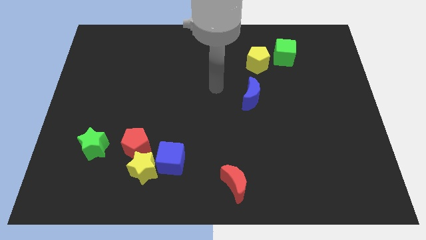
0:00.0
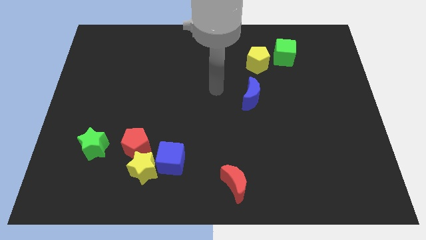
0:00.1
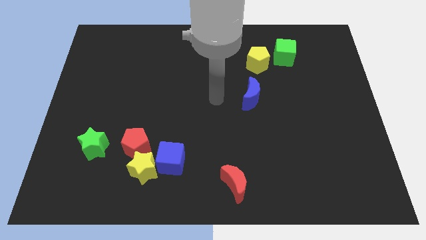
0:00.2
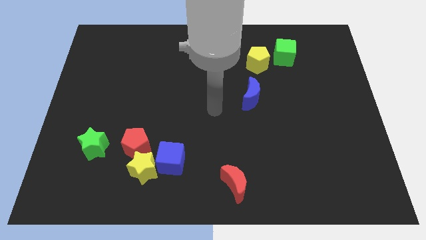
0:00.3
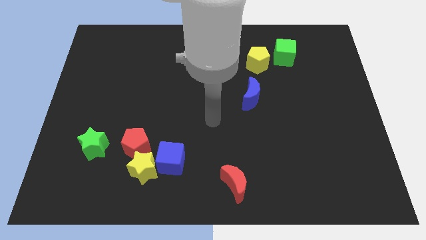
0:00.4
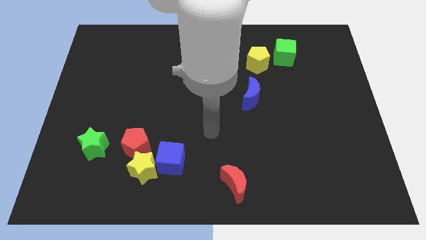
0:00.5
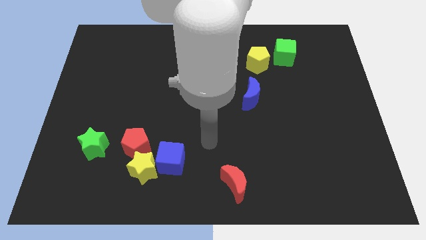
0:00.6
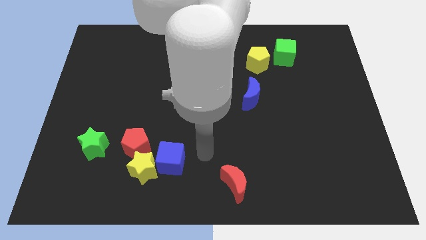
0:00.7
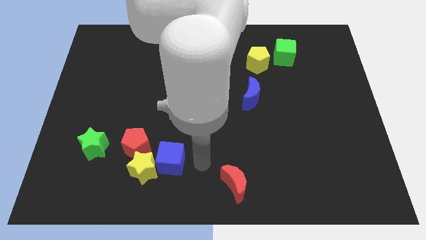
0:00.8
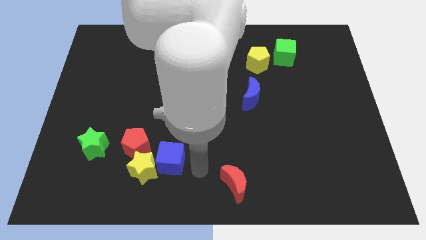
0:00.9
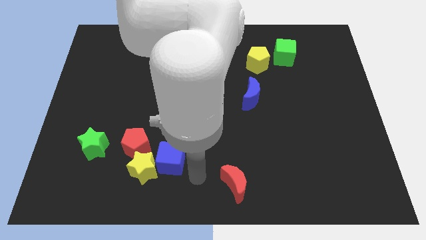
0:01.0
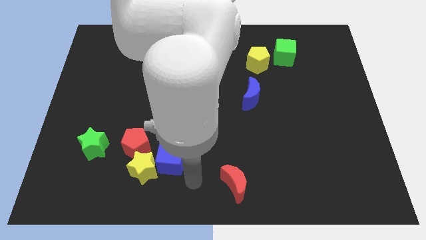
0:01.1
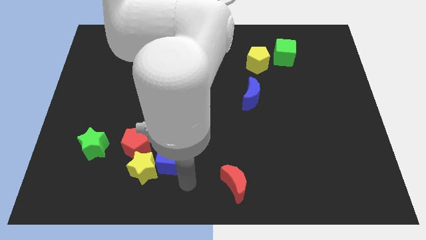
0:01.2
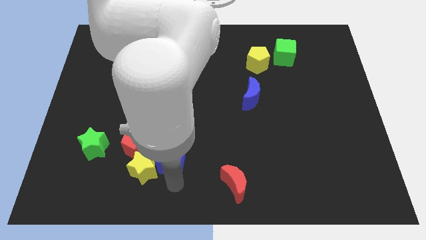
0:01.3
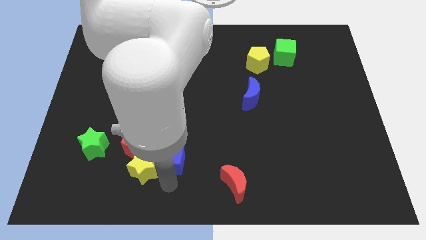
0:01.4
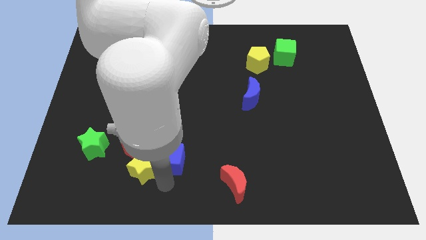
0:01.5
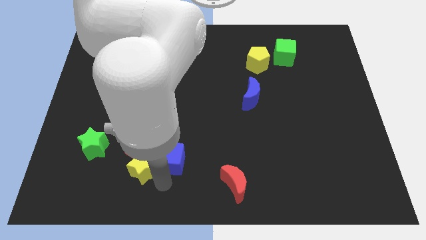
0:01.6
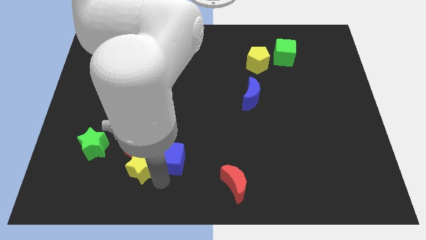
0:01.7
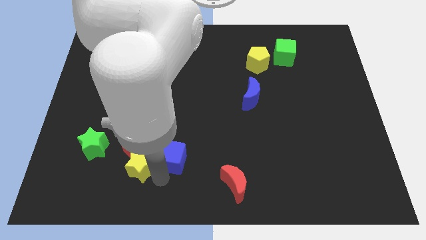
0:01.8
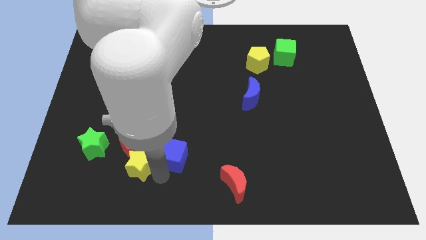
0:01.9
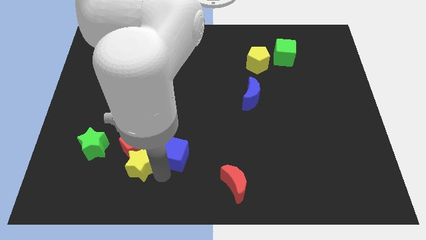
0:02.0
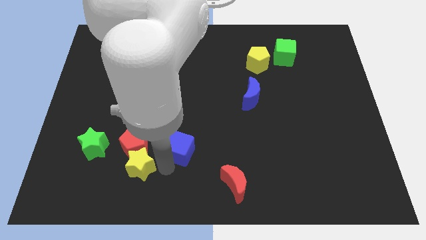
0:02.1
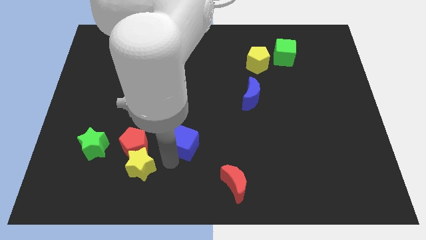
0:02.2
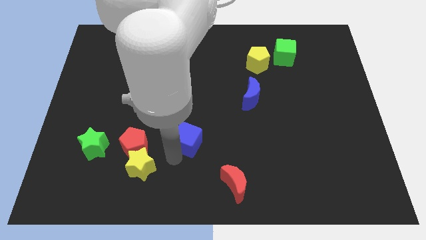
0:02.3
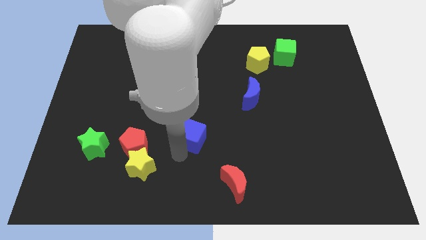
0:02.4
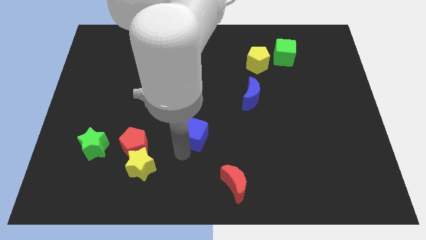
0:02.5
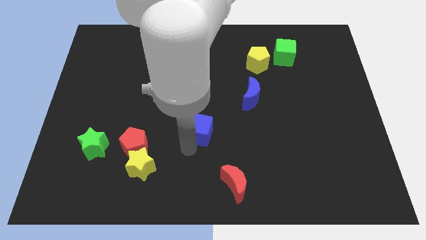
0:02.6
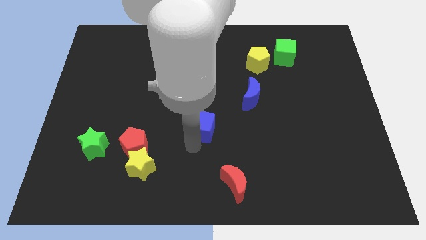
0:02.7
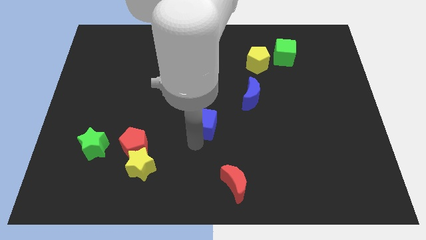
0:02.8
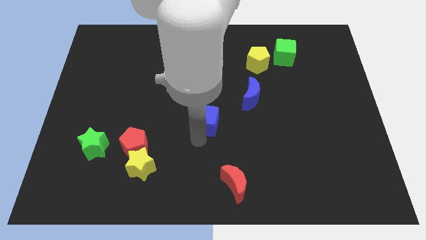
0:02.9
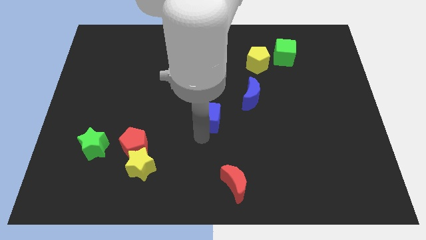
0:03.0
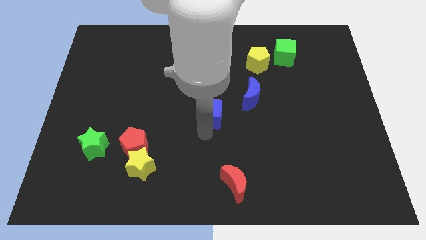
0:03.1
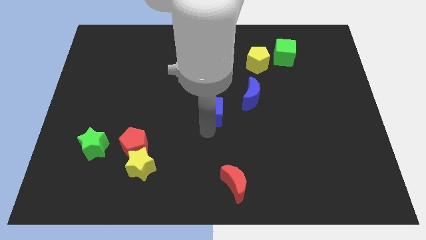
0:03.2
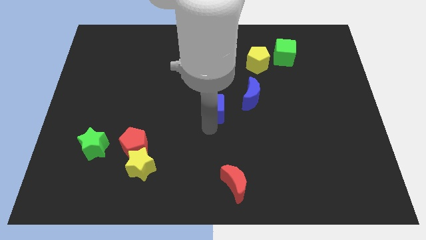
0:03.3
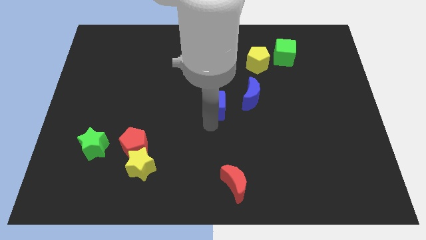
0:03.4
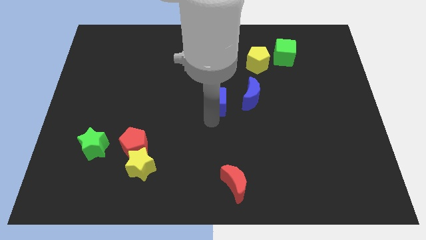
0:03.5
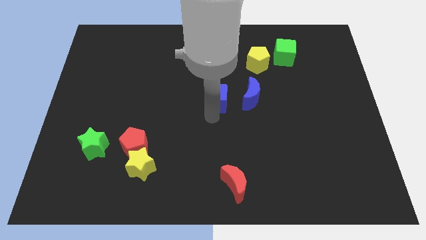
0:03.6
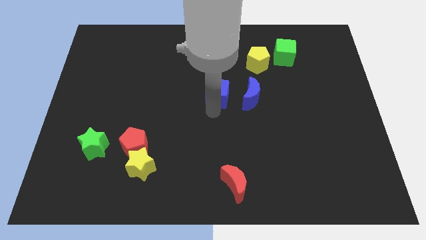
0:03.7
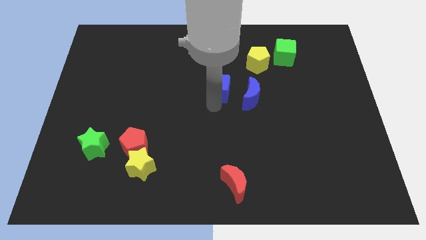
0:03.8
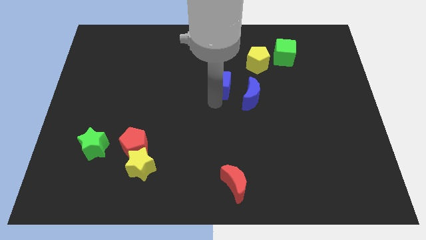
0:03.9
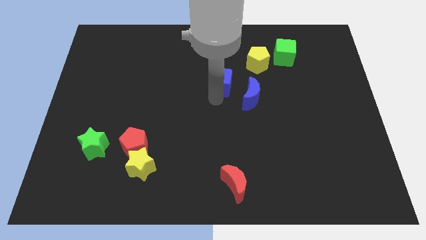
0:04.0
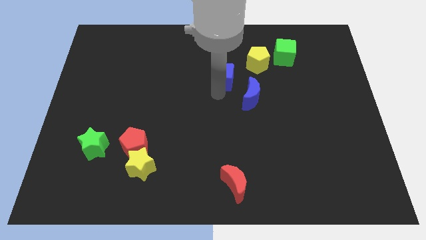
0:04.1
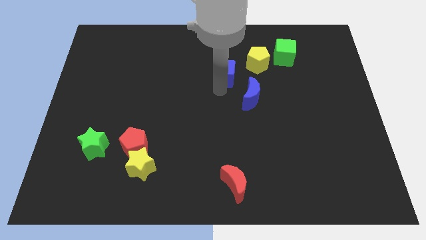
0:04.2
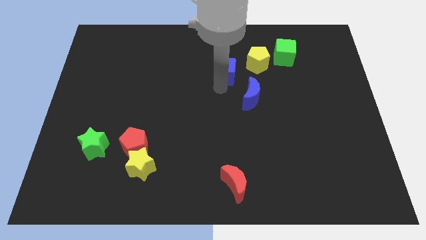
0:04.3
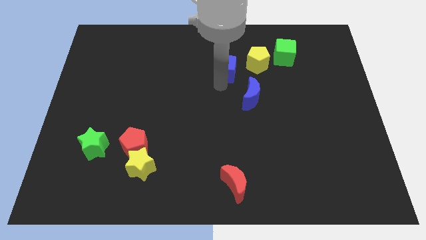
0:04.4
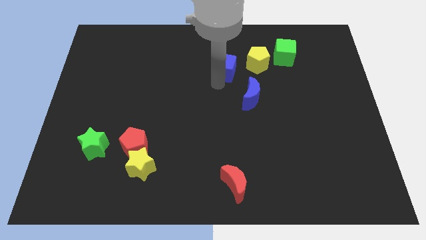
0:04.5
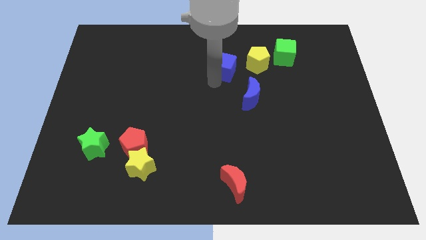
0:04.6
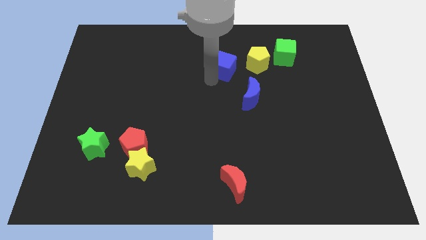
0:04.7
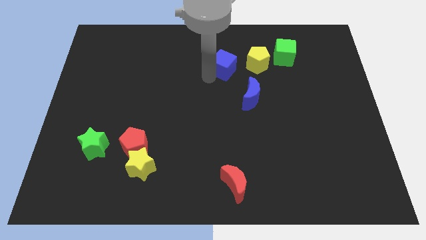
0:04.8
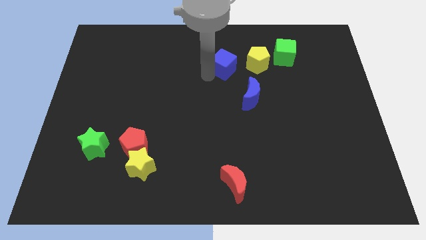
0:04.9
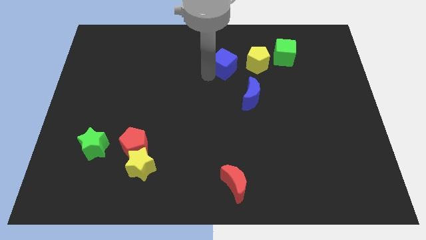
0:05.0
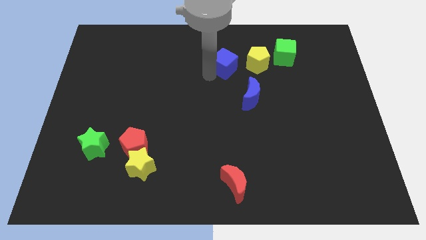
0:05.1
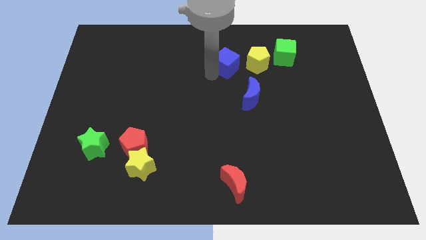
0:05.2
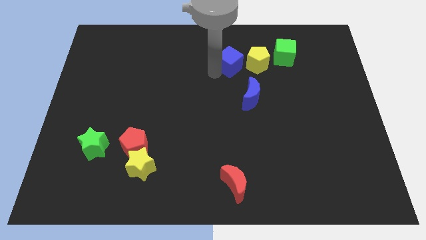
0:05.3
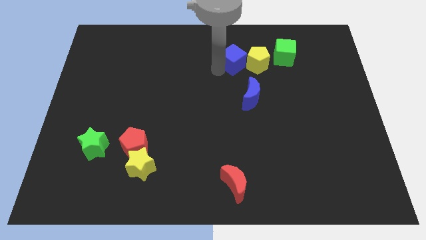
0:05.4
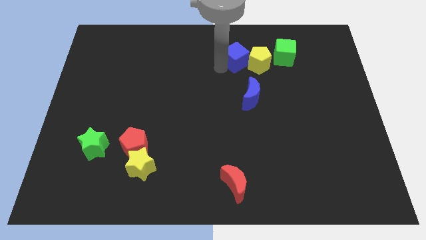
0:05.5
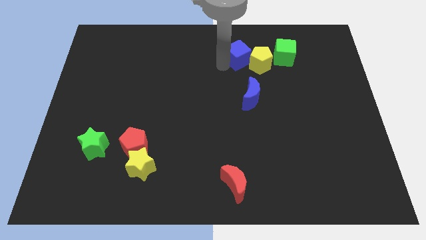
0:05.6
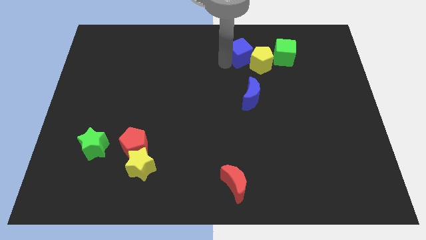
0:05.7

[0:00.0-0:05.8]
push the blue cube next to the yellow pentagon

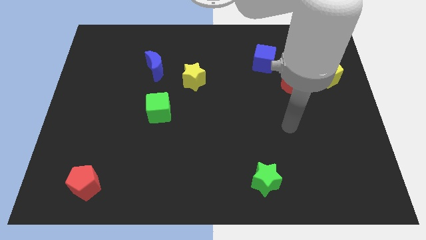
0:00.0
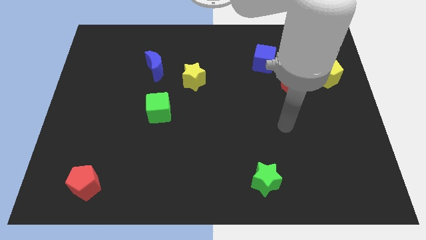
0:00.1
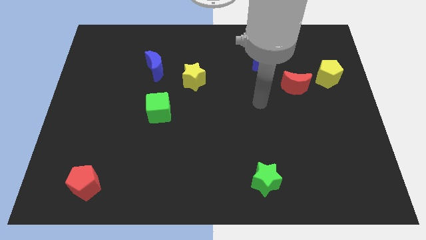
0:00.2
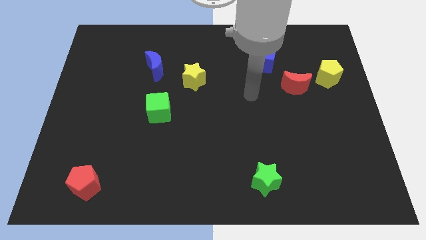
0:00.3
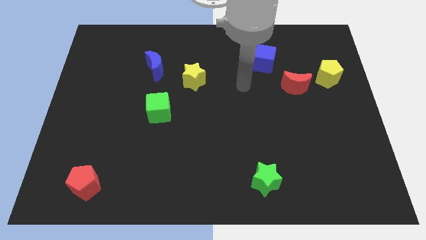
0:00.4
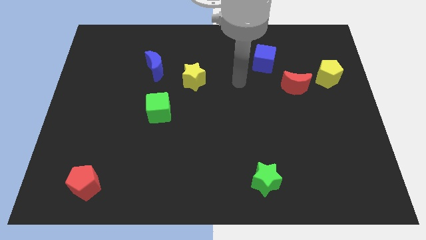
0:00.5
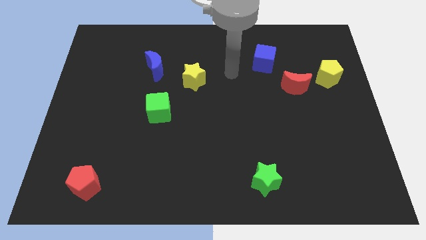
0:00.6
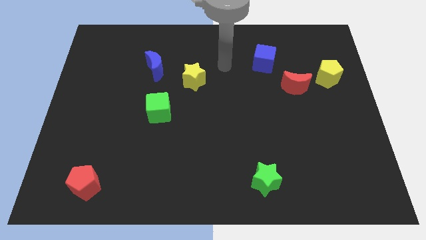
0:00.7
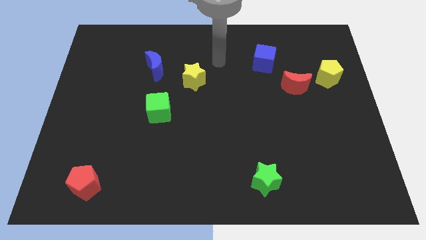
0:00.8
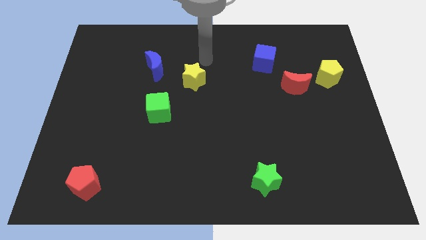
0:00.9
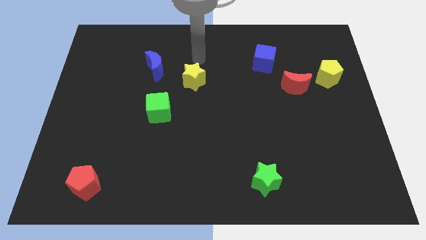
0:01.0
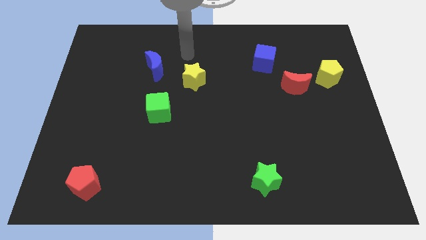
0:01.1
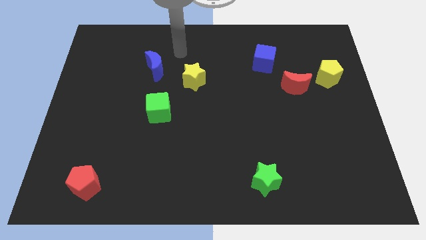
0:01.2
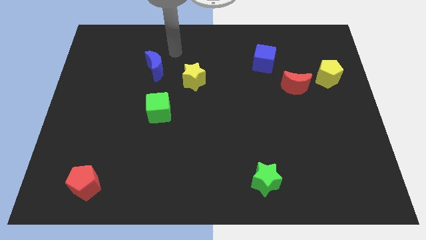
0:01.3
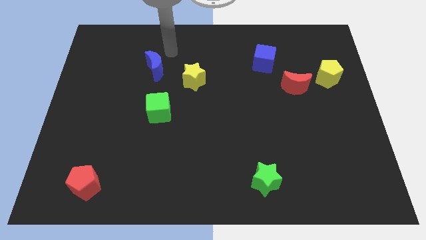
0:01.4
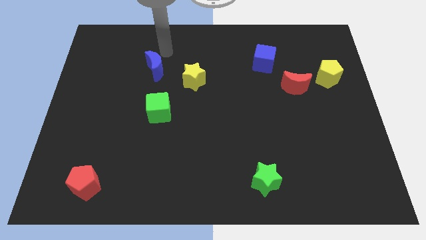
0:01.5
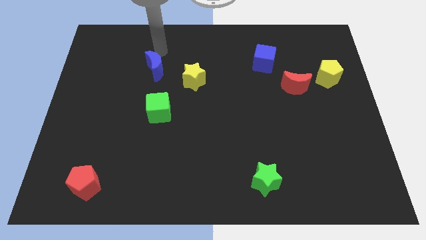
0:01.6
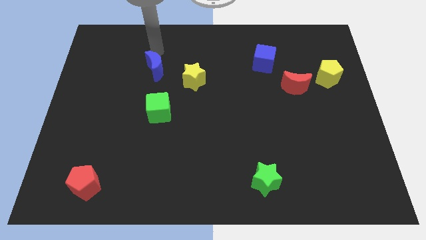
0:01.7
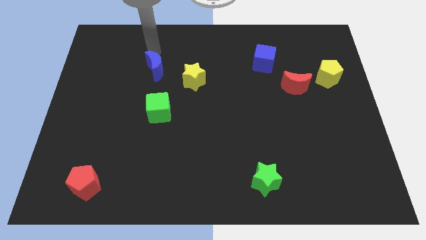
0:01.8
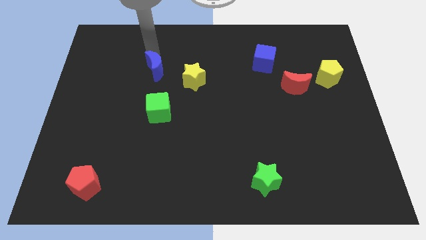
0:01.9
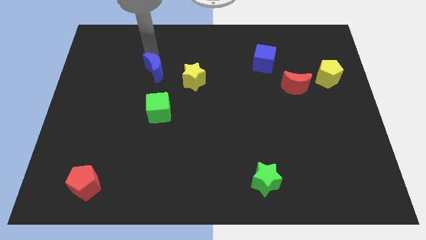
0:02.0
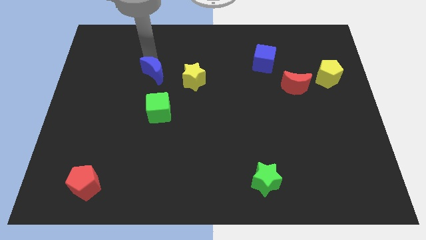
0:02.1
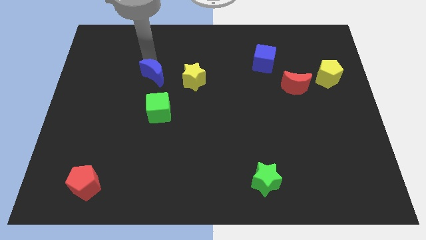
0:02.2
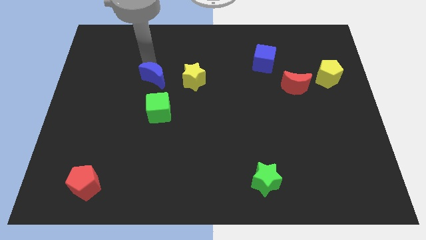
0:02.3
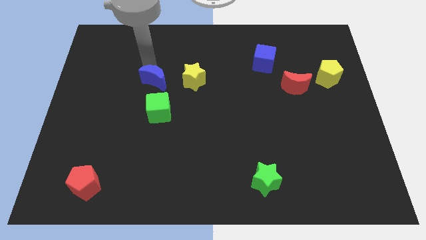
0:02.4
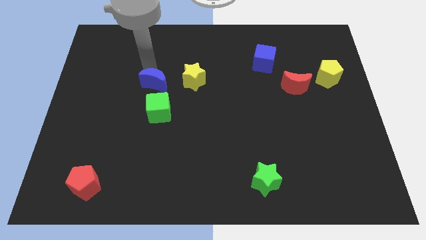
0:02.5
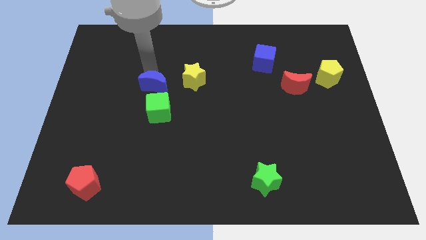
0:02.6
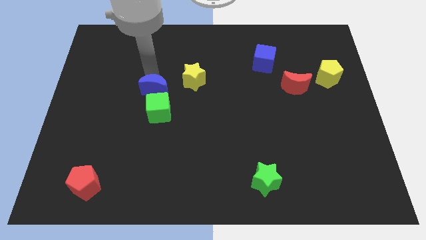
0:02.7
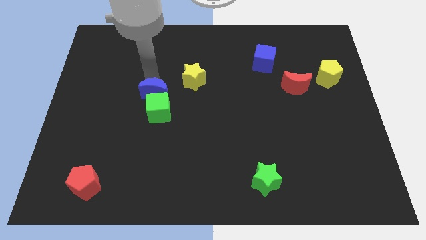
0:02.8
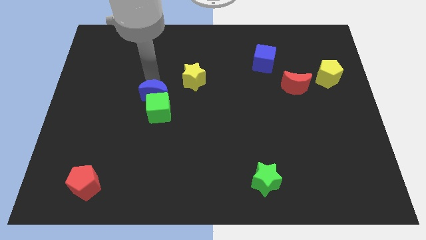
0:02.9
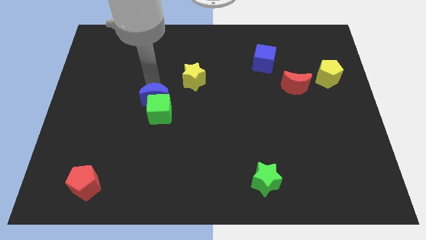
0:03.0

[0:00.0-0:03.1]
move the blue moon to the green cube

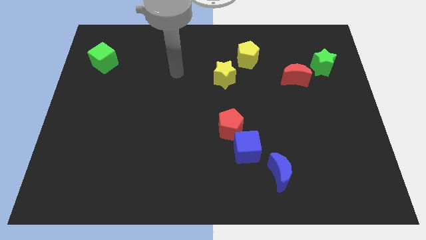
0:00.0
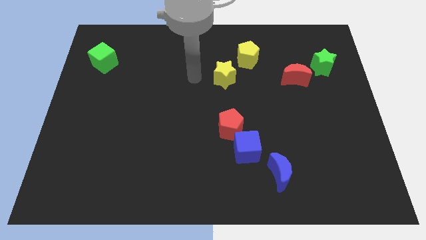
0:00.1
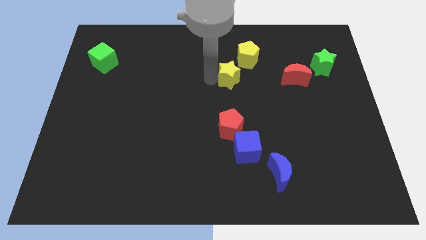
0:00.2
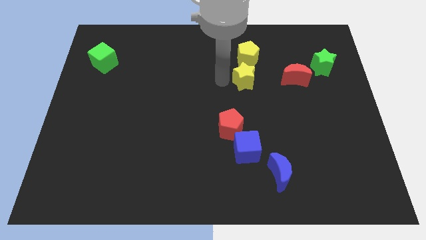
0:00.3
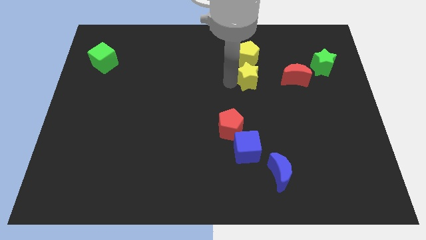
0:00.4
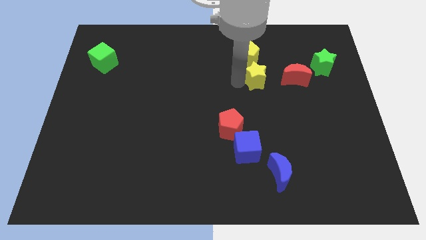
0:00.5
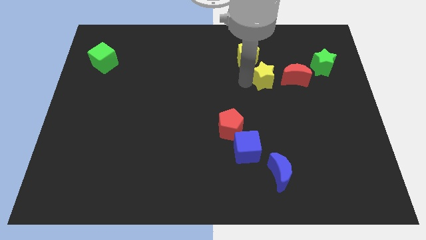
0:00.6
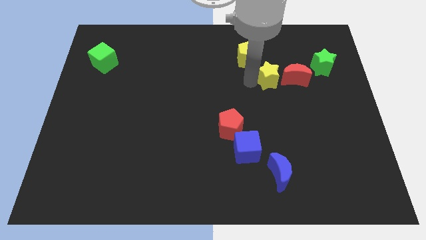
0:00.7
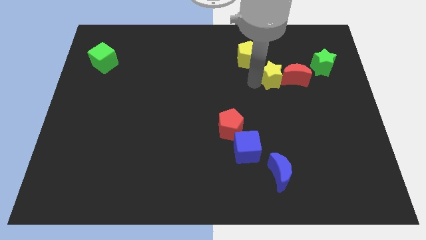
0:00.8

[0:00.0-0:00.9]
move the yellow star towards the red moon
